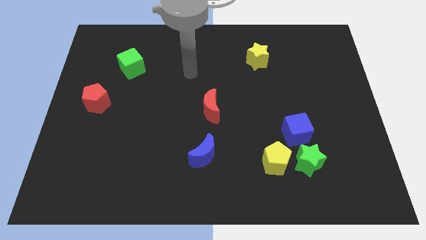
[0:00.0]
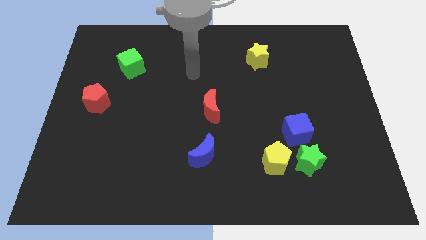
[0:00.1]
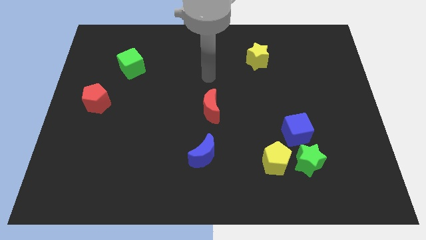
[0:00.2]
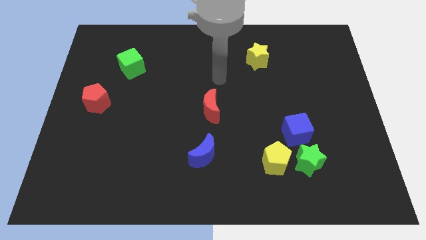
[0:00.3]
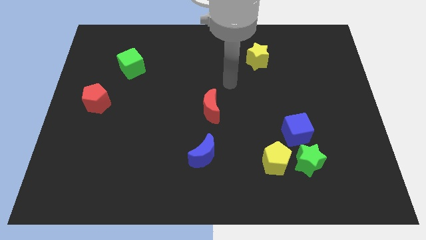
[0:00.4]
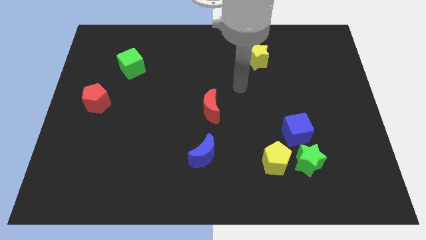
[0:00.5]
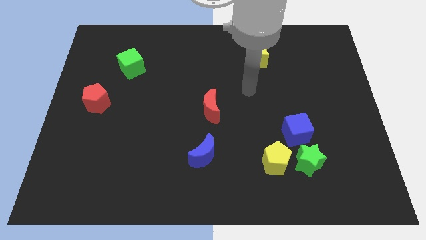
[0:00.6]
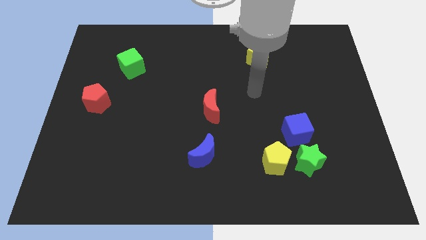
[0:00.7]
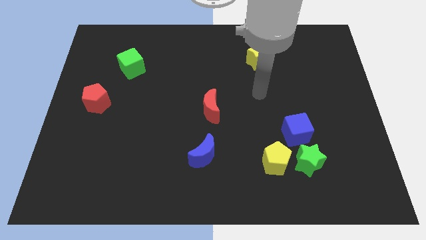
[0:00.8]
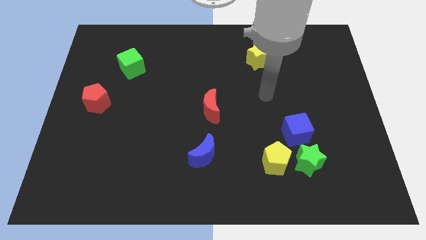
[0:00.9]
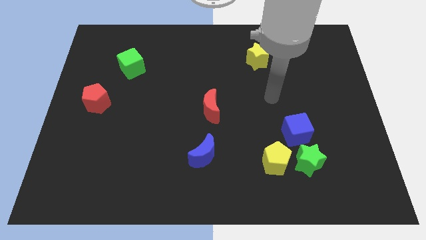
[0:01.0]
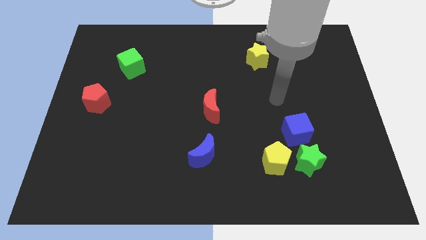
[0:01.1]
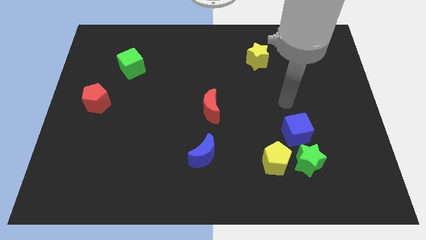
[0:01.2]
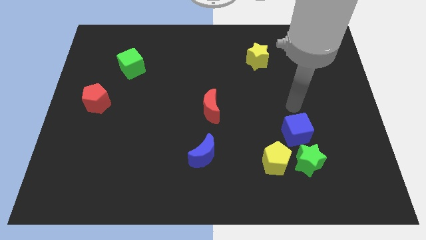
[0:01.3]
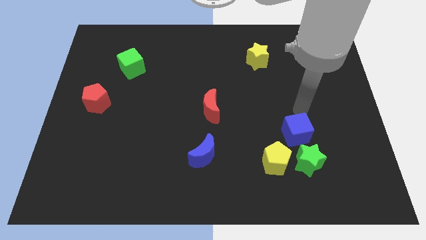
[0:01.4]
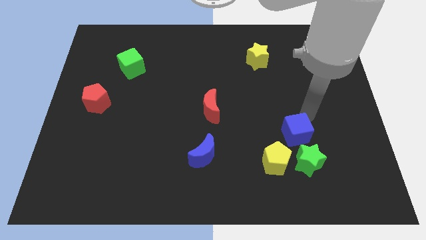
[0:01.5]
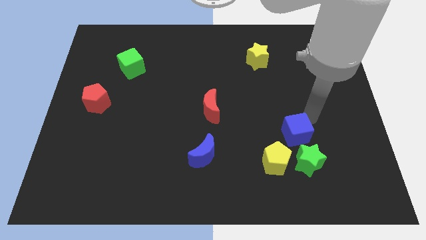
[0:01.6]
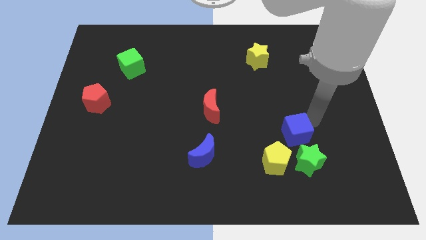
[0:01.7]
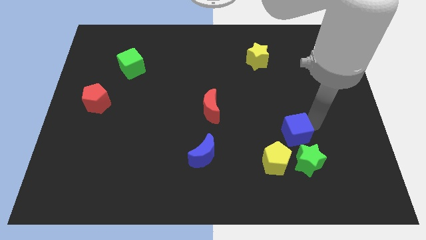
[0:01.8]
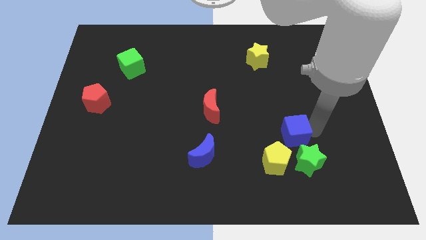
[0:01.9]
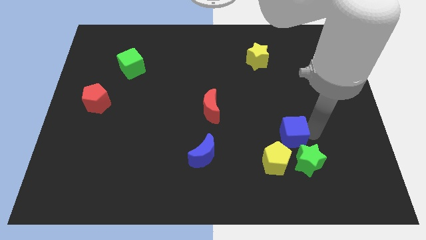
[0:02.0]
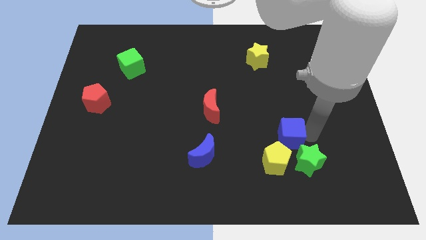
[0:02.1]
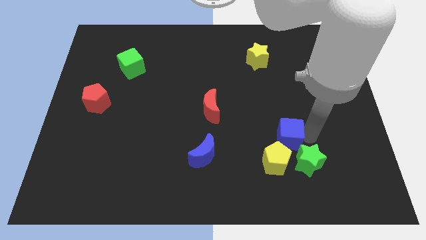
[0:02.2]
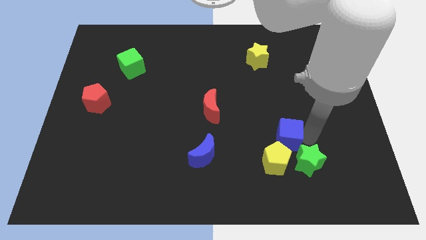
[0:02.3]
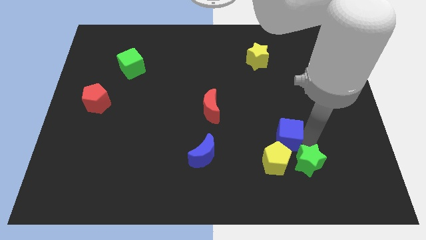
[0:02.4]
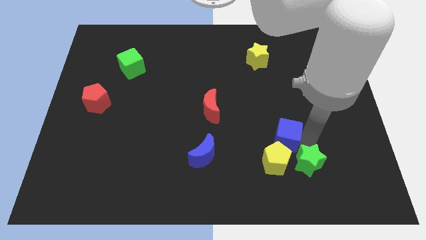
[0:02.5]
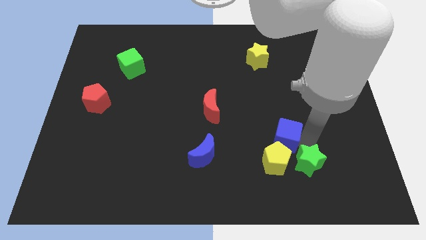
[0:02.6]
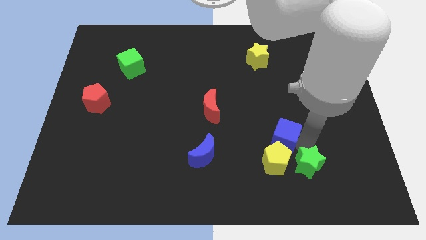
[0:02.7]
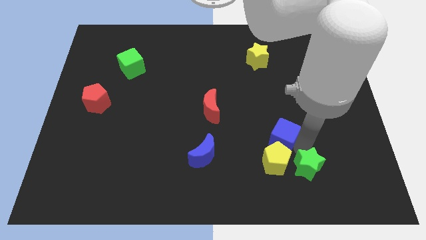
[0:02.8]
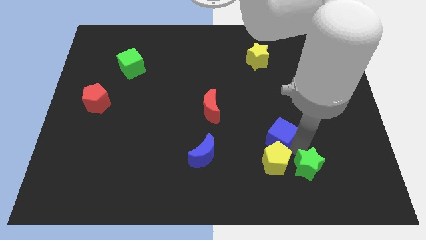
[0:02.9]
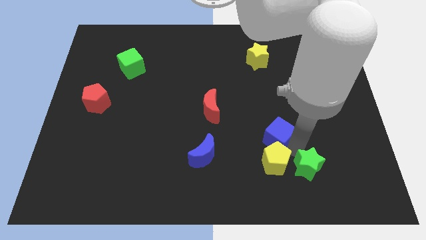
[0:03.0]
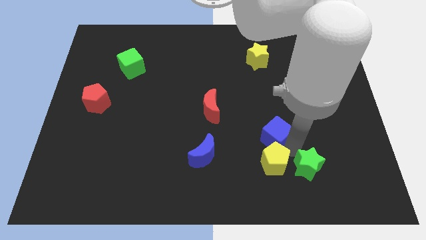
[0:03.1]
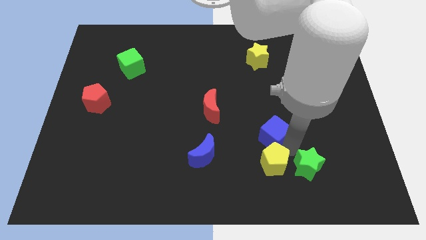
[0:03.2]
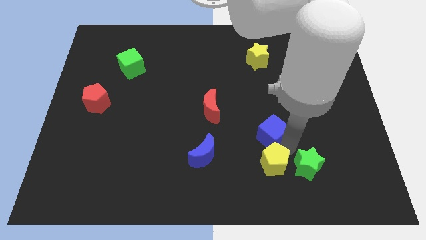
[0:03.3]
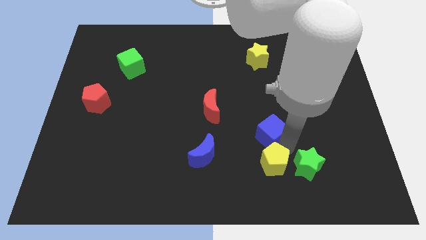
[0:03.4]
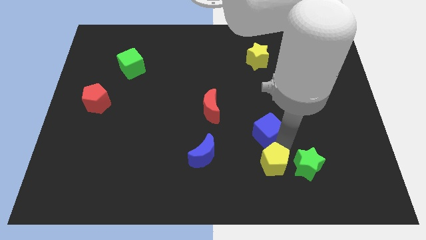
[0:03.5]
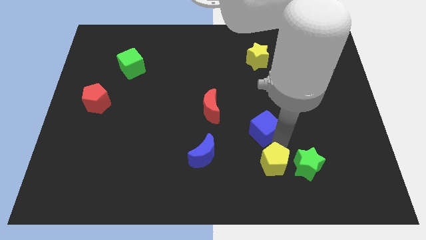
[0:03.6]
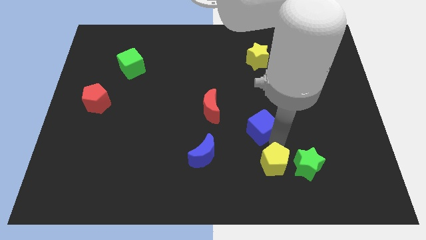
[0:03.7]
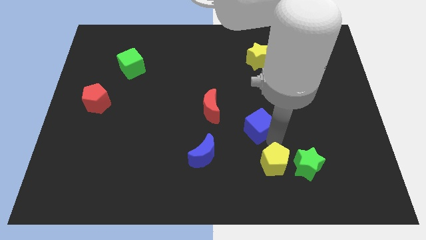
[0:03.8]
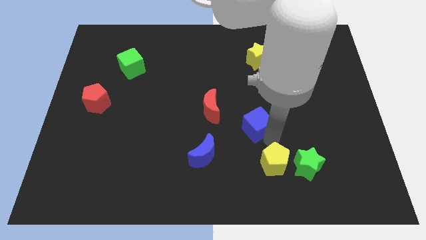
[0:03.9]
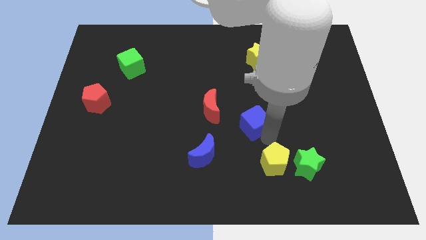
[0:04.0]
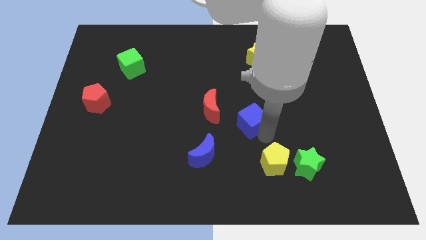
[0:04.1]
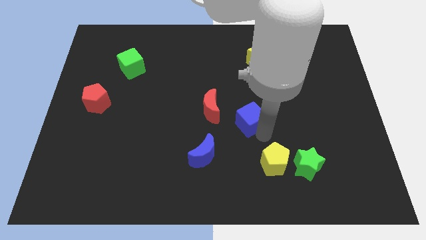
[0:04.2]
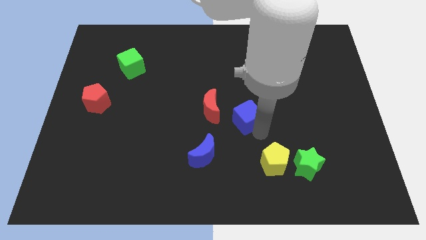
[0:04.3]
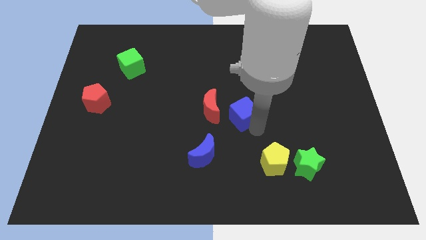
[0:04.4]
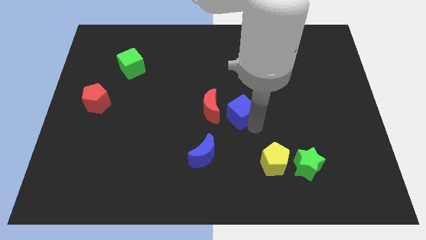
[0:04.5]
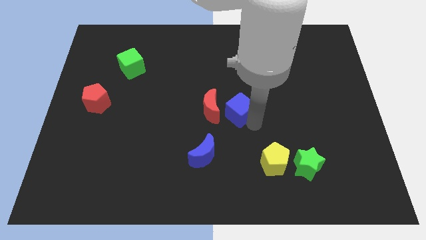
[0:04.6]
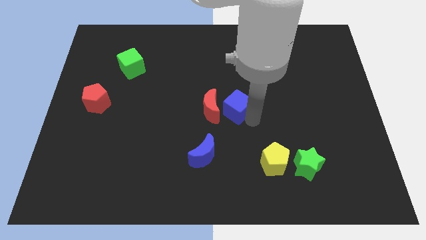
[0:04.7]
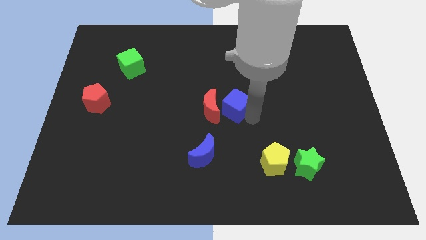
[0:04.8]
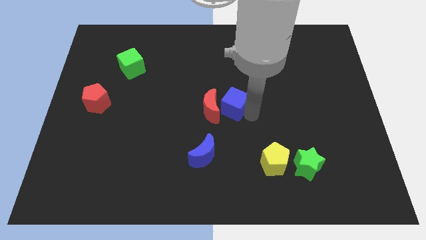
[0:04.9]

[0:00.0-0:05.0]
move the blue cube towards the red moon

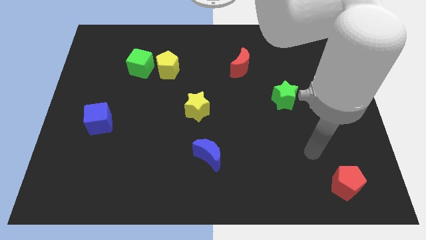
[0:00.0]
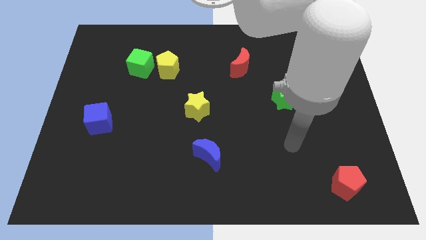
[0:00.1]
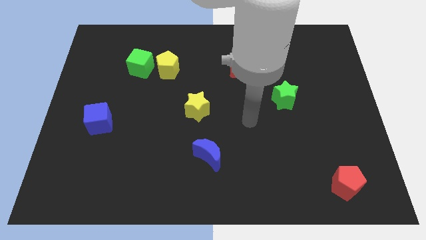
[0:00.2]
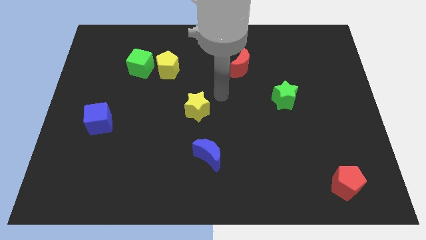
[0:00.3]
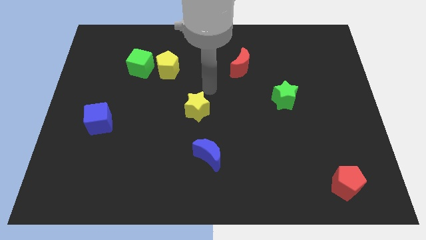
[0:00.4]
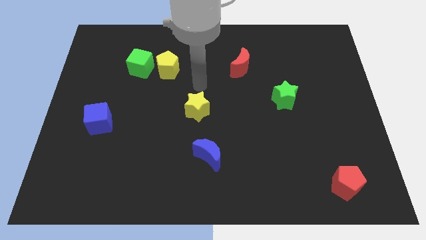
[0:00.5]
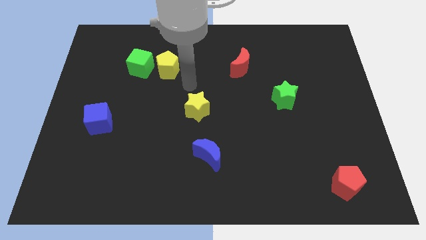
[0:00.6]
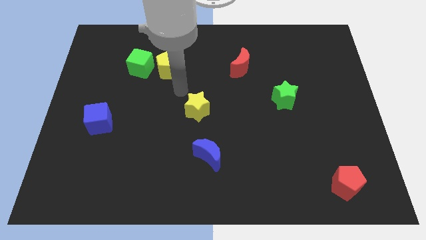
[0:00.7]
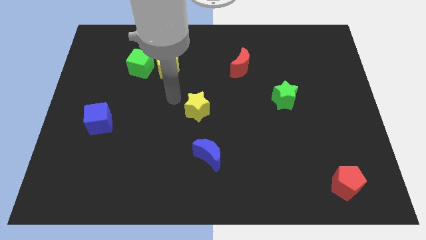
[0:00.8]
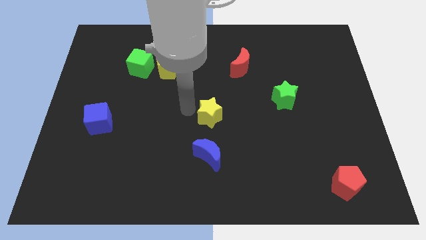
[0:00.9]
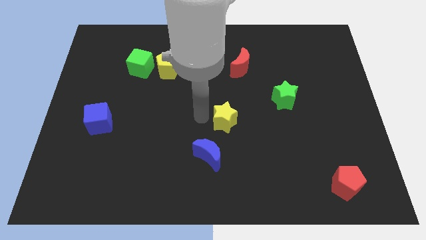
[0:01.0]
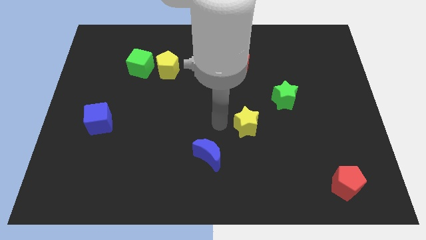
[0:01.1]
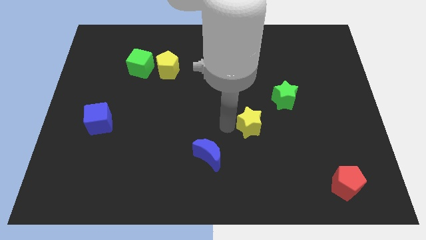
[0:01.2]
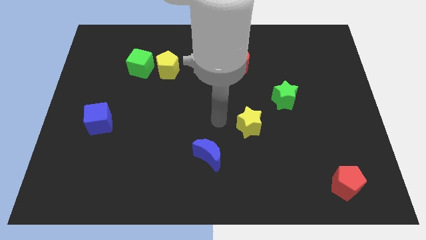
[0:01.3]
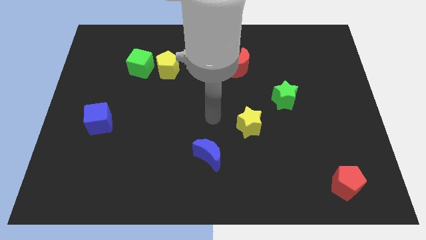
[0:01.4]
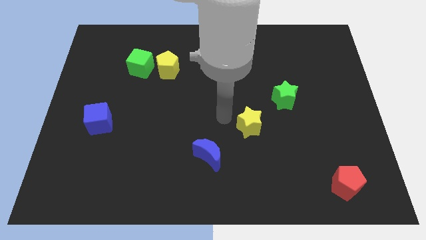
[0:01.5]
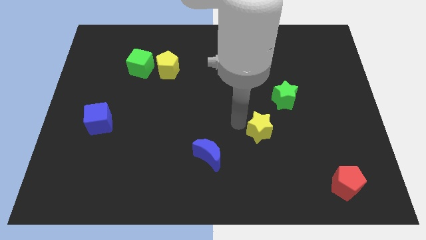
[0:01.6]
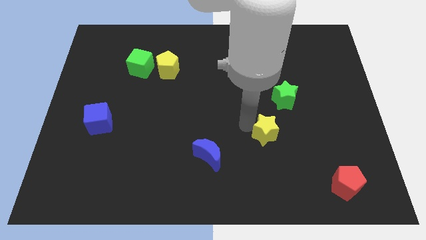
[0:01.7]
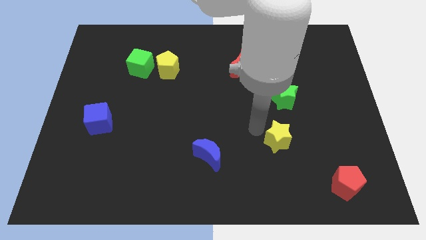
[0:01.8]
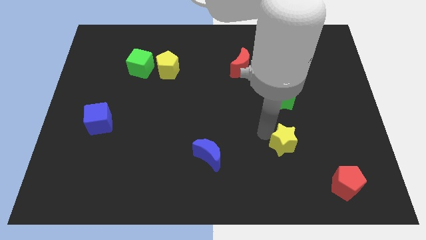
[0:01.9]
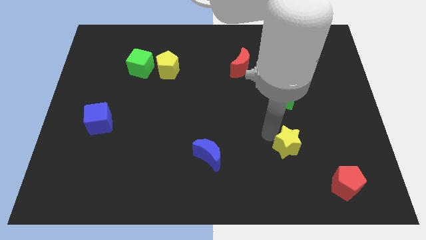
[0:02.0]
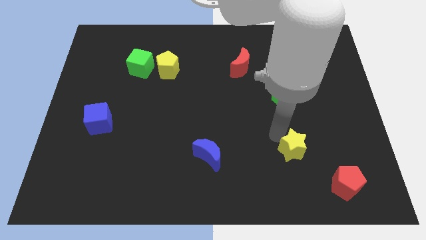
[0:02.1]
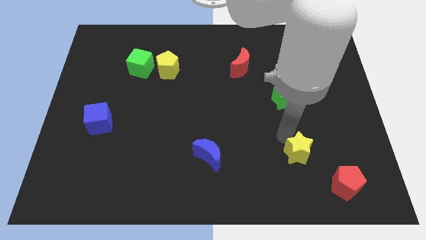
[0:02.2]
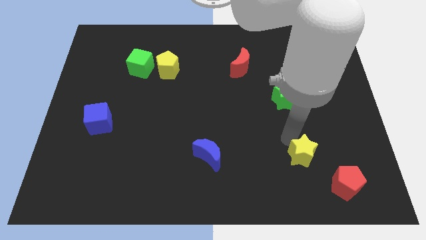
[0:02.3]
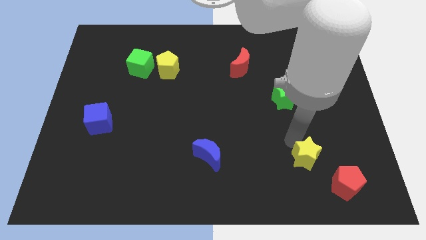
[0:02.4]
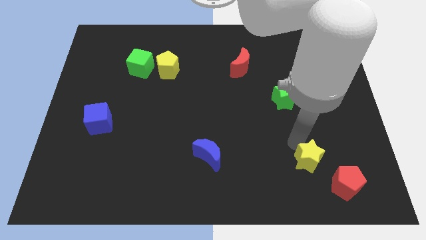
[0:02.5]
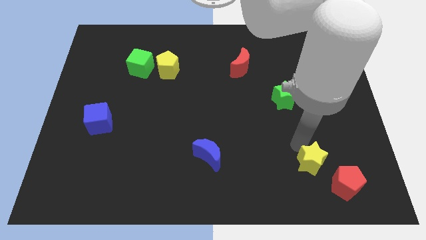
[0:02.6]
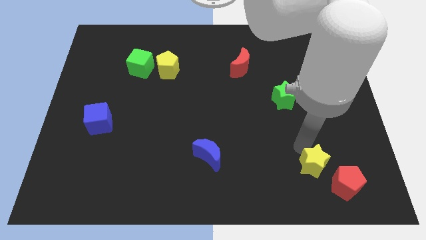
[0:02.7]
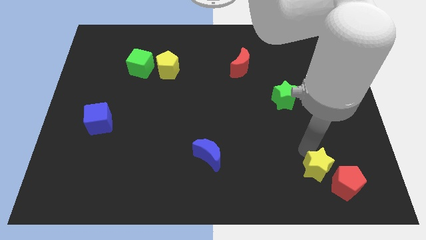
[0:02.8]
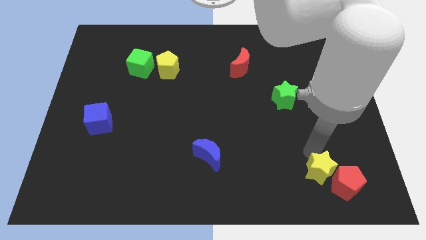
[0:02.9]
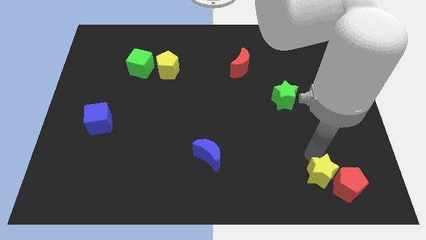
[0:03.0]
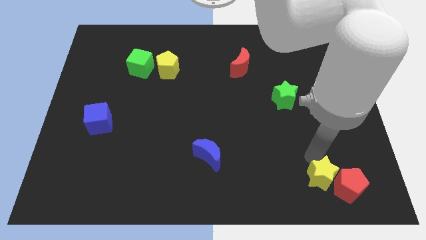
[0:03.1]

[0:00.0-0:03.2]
push the yellow star to the red pentagon

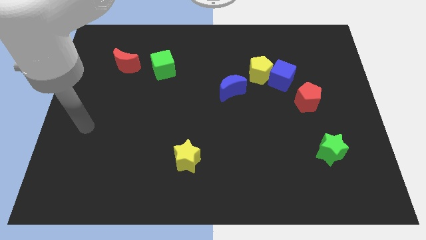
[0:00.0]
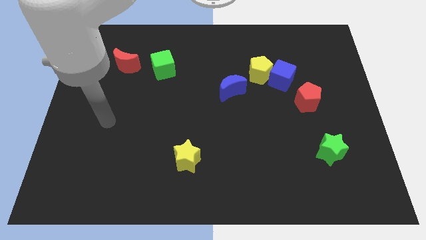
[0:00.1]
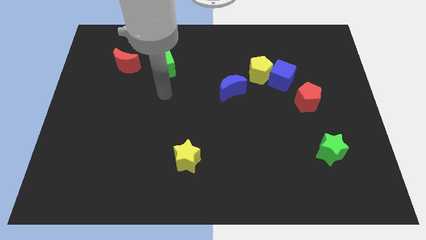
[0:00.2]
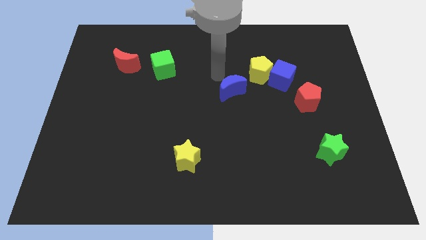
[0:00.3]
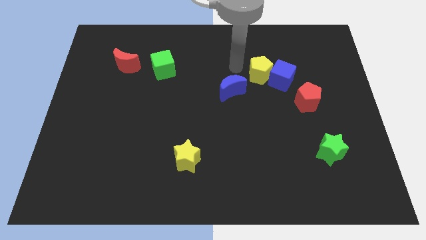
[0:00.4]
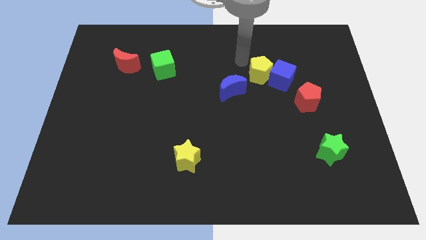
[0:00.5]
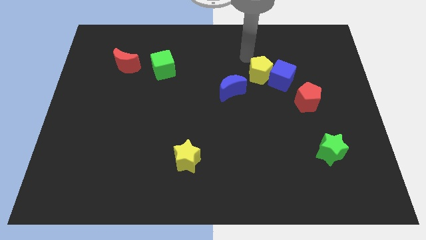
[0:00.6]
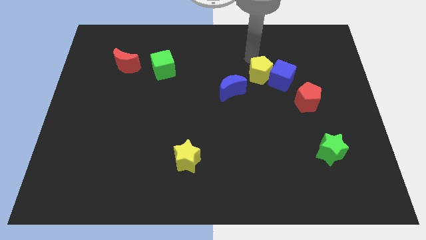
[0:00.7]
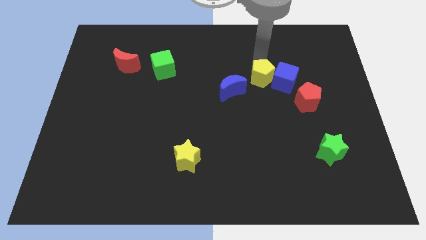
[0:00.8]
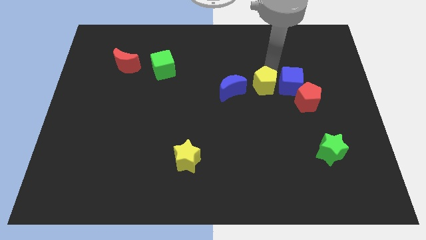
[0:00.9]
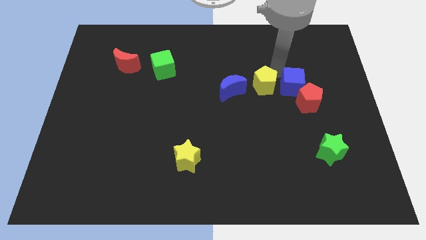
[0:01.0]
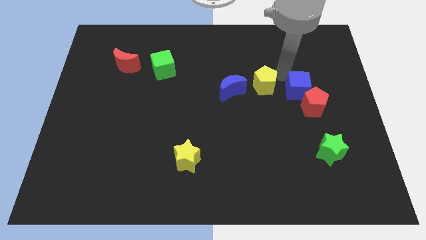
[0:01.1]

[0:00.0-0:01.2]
push the blue cube to the red pentagon
